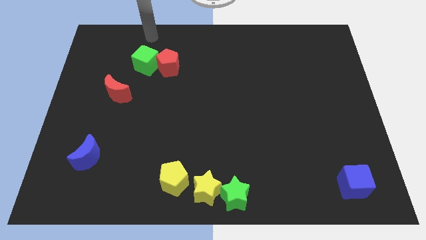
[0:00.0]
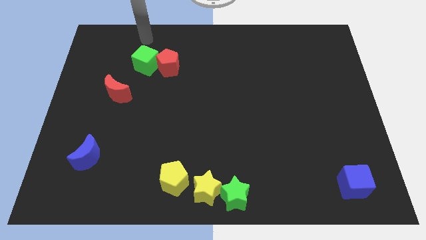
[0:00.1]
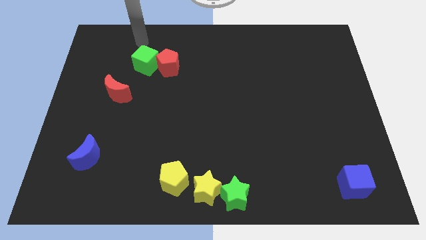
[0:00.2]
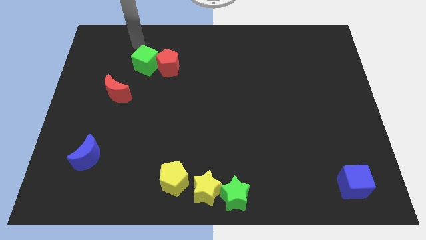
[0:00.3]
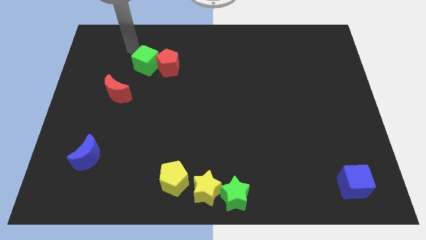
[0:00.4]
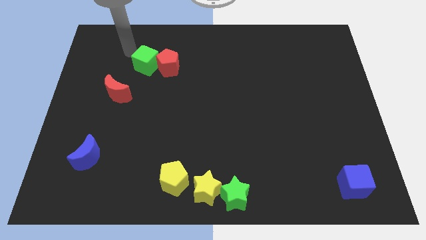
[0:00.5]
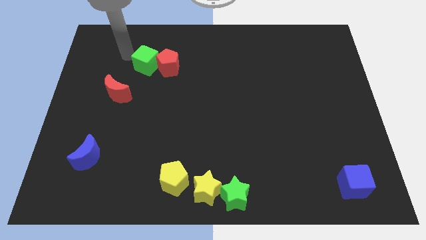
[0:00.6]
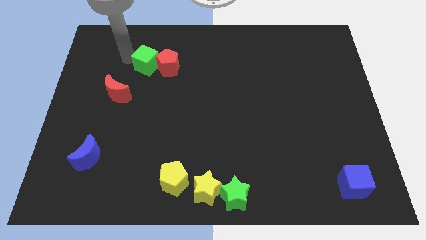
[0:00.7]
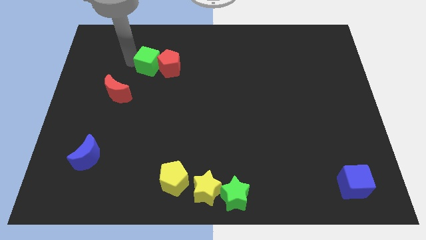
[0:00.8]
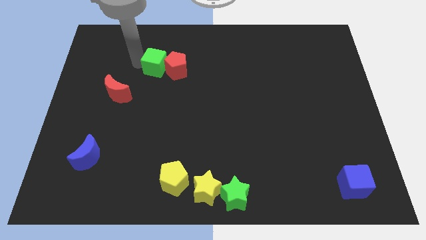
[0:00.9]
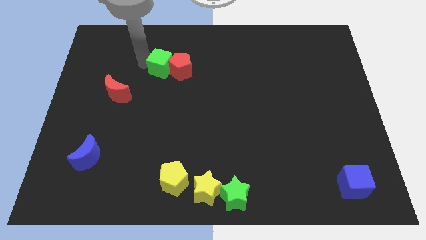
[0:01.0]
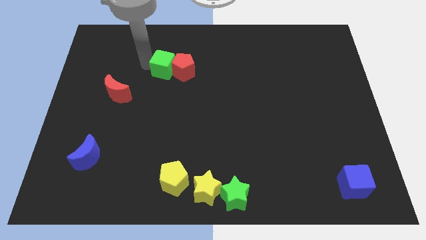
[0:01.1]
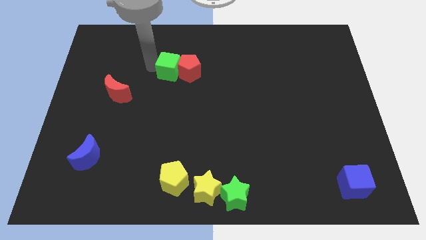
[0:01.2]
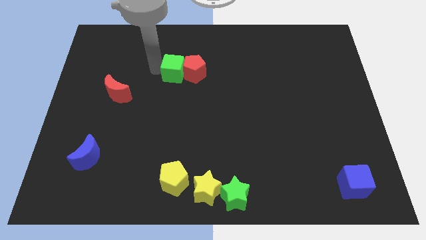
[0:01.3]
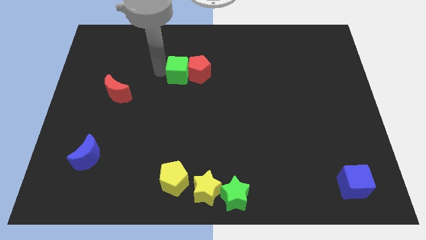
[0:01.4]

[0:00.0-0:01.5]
push the green cube and red pentagon towards the right of the board

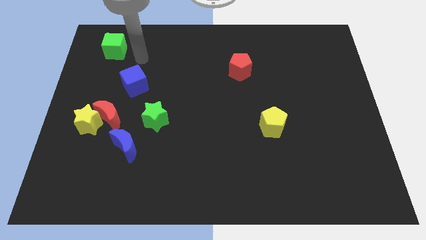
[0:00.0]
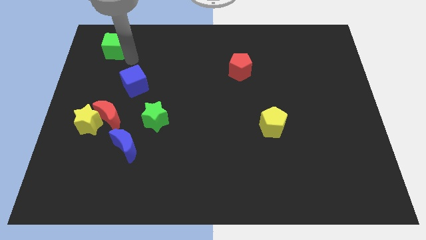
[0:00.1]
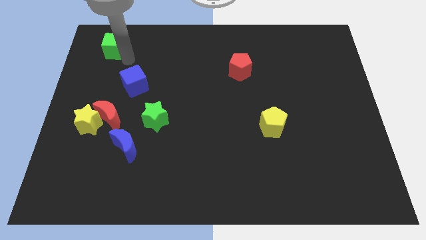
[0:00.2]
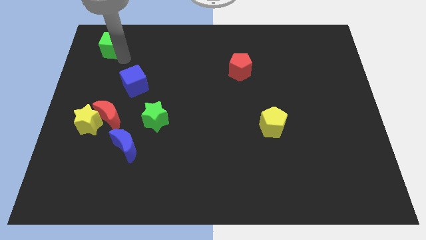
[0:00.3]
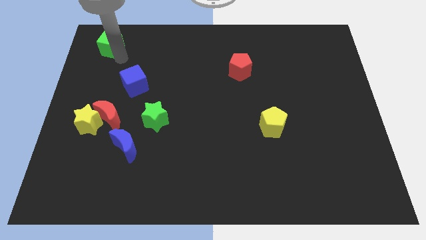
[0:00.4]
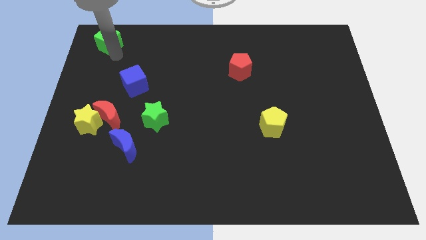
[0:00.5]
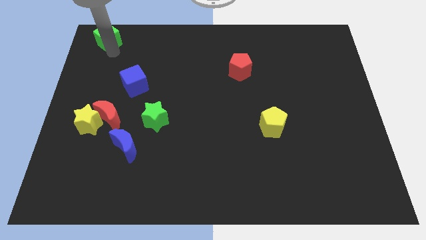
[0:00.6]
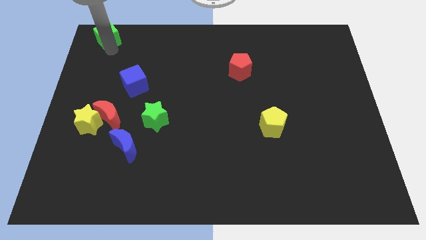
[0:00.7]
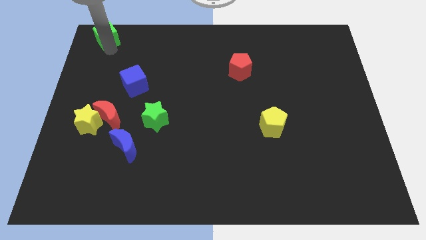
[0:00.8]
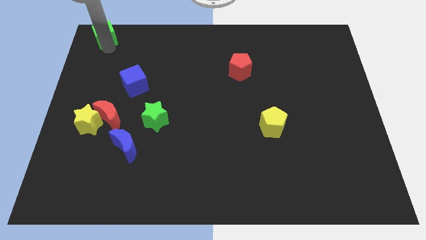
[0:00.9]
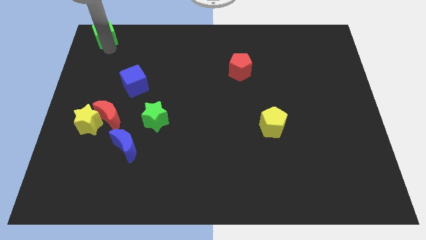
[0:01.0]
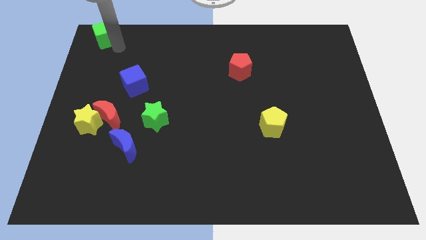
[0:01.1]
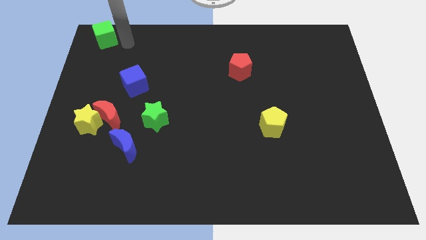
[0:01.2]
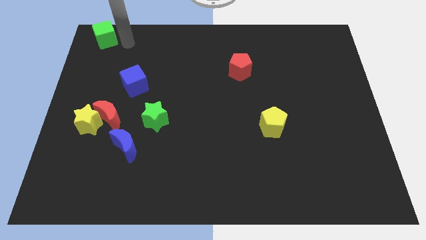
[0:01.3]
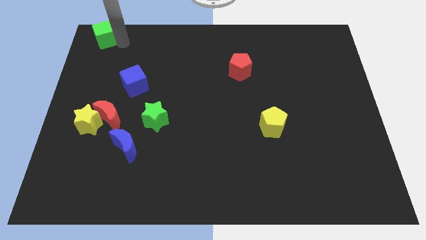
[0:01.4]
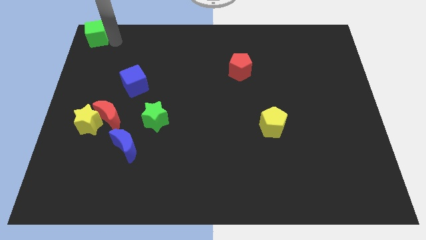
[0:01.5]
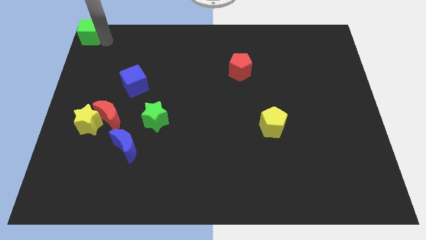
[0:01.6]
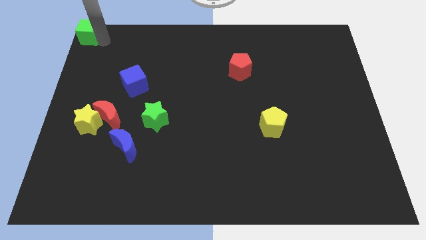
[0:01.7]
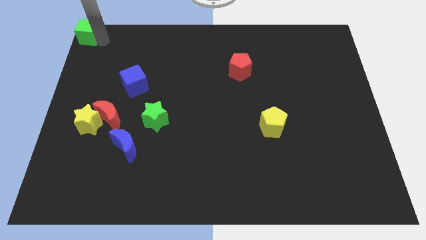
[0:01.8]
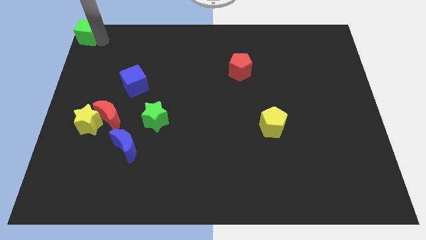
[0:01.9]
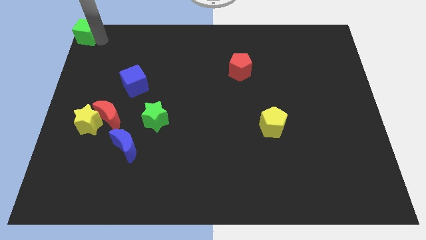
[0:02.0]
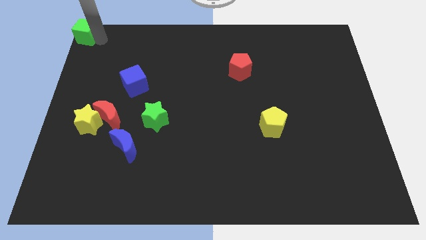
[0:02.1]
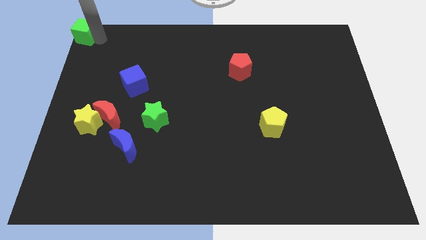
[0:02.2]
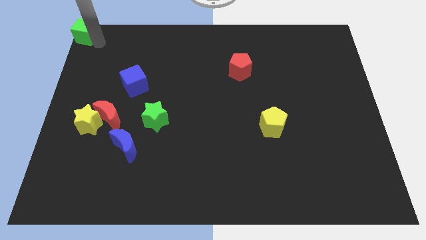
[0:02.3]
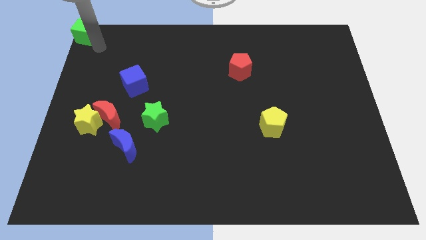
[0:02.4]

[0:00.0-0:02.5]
push the green cube to the top left corner of the board

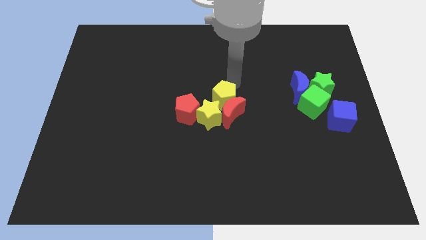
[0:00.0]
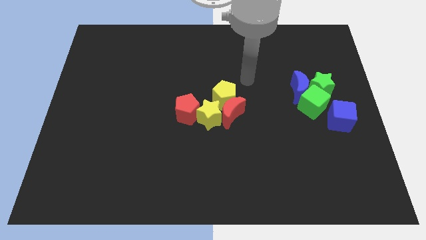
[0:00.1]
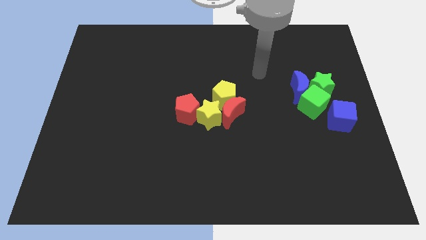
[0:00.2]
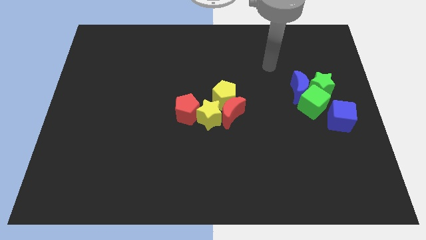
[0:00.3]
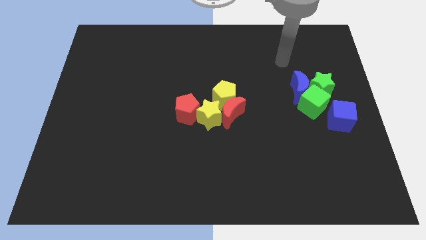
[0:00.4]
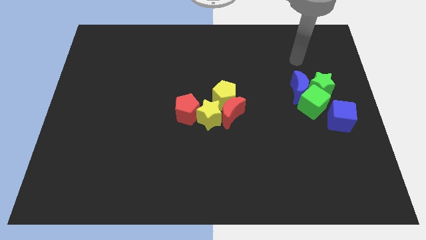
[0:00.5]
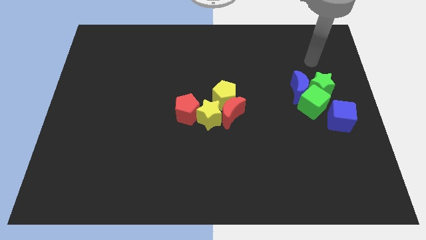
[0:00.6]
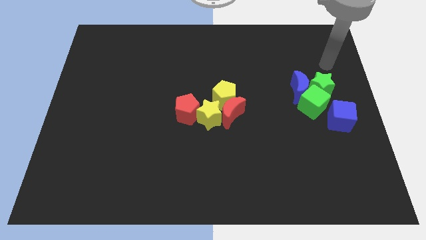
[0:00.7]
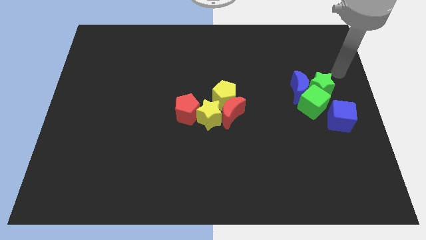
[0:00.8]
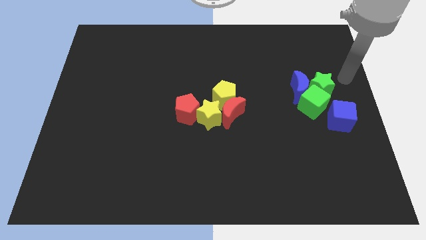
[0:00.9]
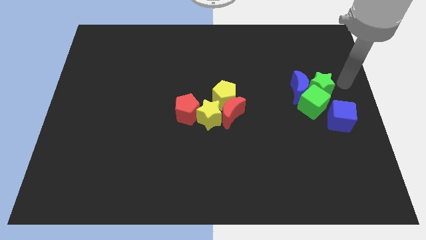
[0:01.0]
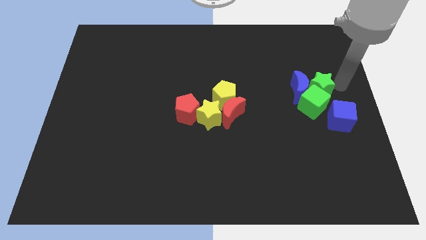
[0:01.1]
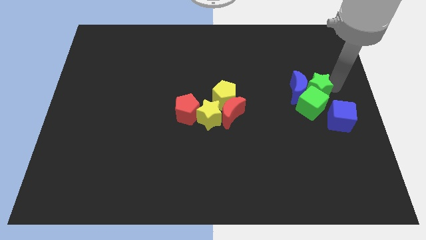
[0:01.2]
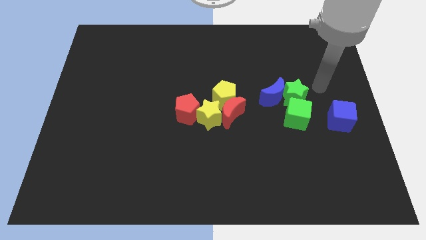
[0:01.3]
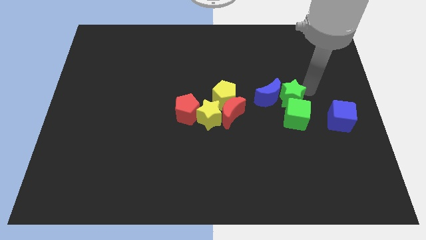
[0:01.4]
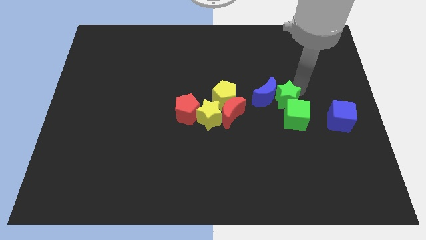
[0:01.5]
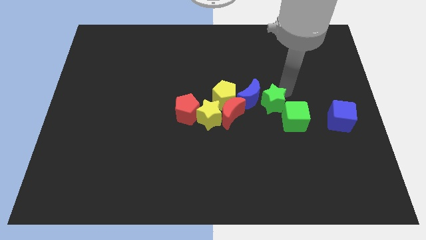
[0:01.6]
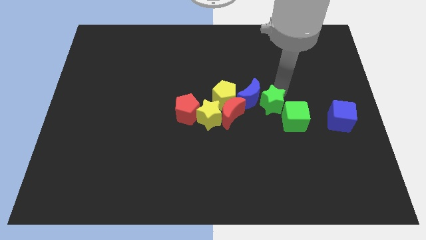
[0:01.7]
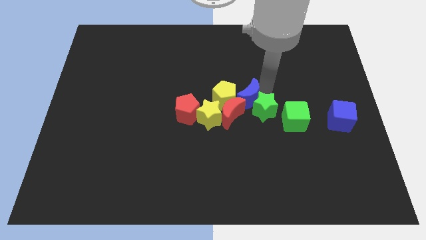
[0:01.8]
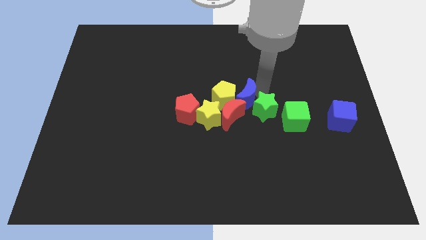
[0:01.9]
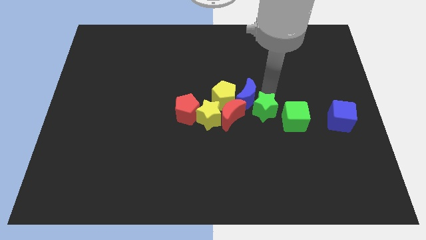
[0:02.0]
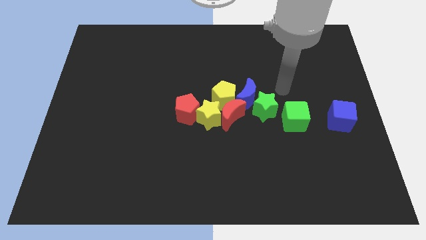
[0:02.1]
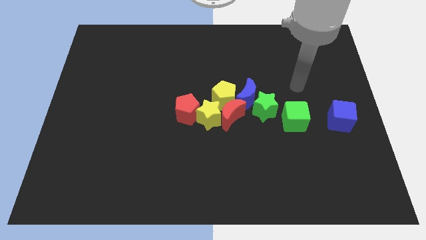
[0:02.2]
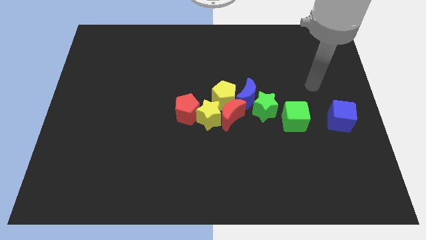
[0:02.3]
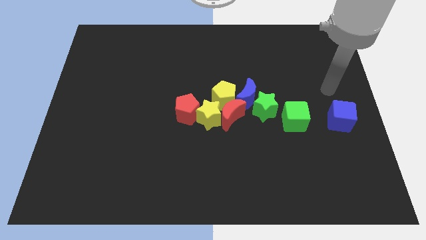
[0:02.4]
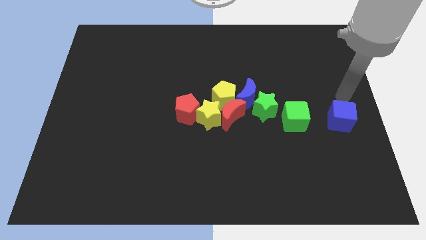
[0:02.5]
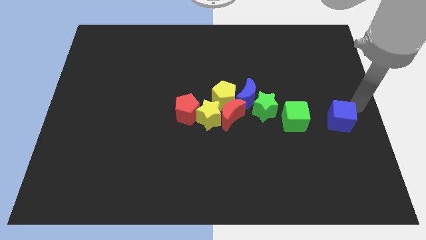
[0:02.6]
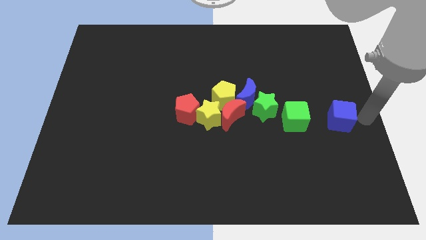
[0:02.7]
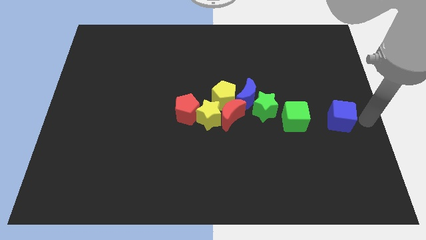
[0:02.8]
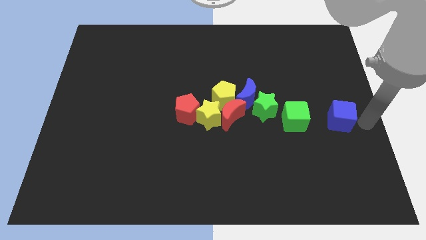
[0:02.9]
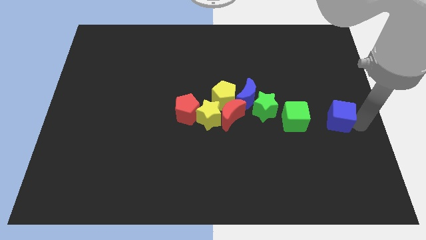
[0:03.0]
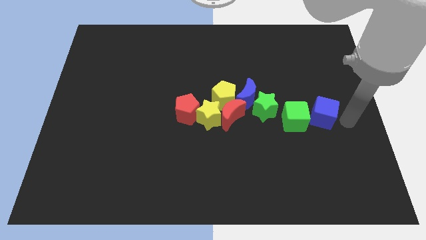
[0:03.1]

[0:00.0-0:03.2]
push the green star in between the blue crescent and green cube

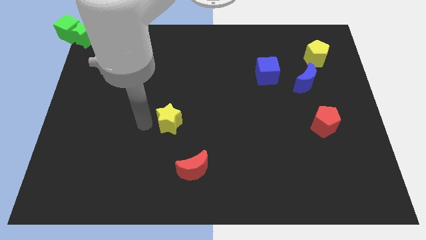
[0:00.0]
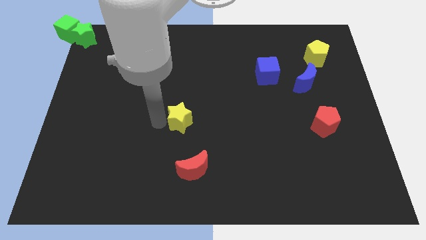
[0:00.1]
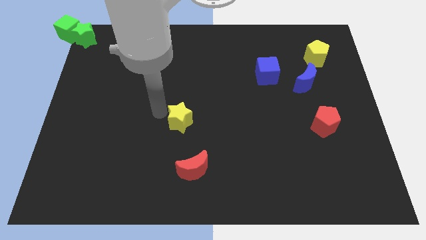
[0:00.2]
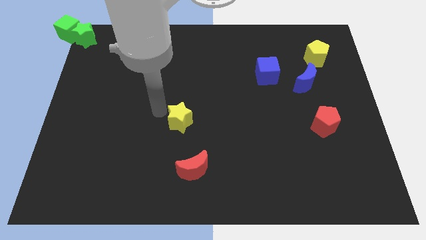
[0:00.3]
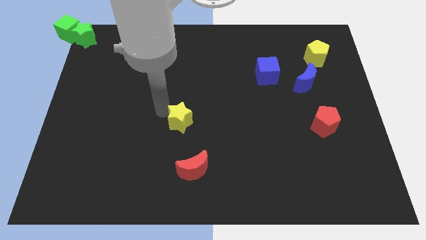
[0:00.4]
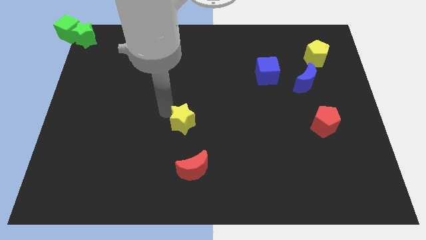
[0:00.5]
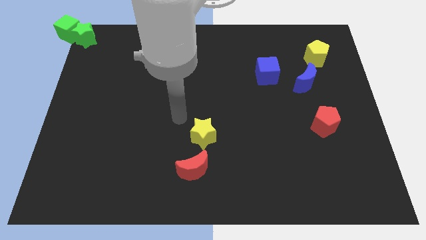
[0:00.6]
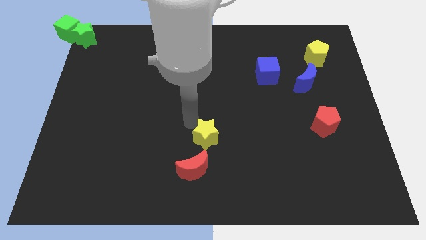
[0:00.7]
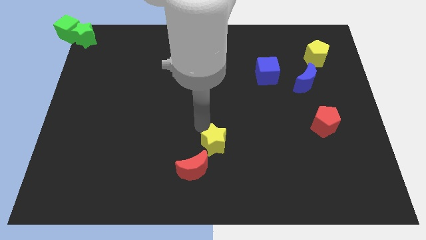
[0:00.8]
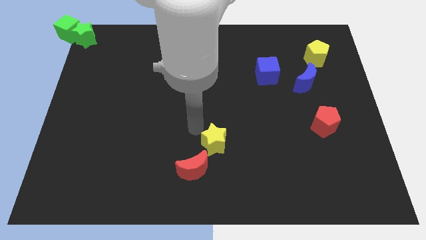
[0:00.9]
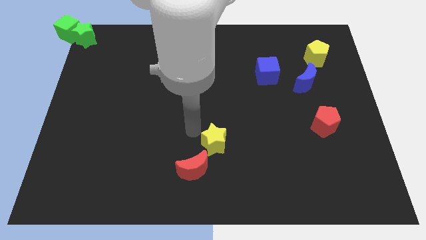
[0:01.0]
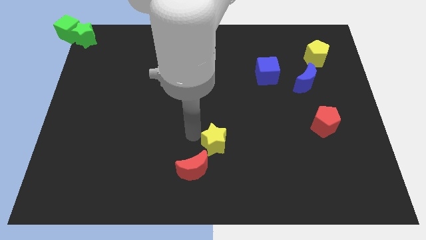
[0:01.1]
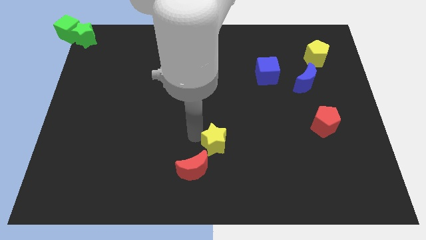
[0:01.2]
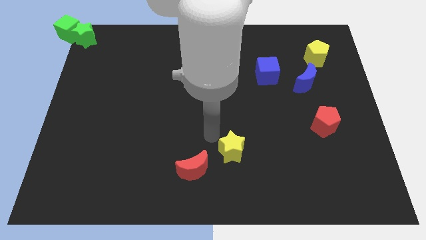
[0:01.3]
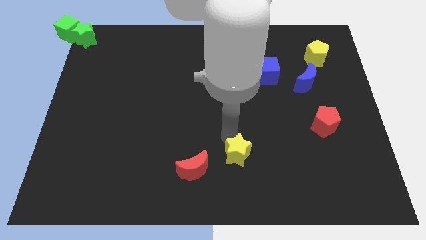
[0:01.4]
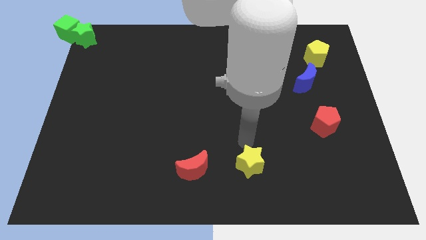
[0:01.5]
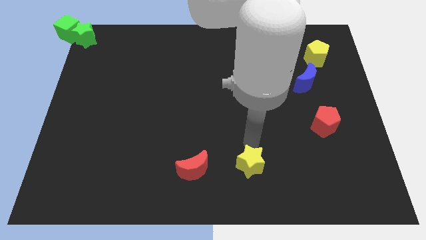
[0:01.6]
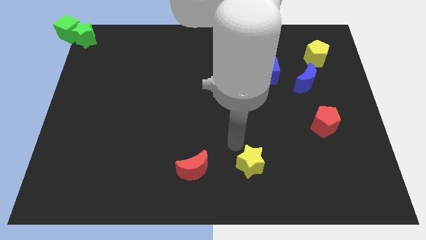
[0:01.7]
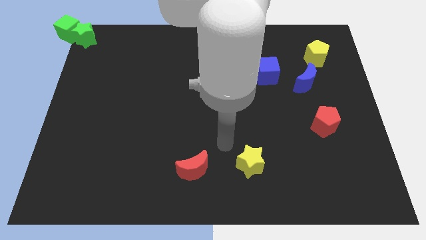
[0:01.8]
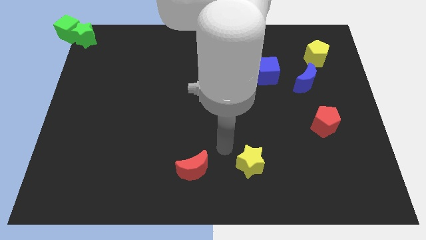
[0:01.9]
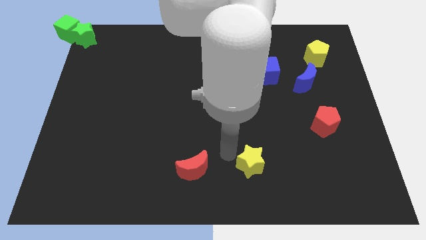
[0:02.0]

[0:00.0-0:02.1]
move the yellow star to the bottom center of the board
